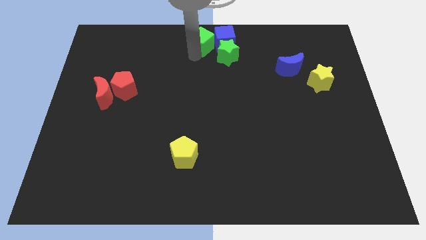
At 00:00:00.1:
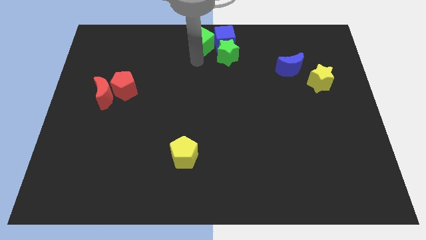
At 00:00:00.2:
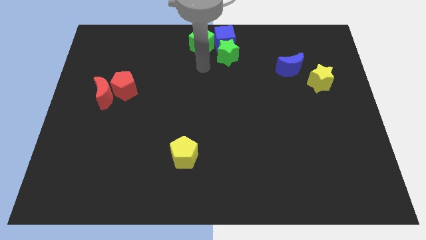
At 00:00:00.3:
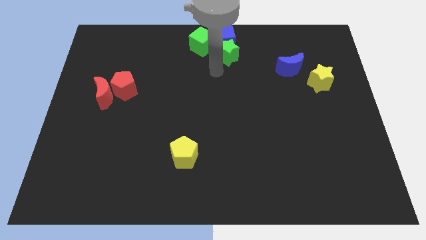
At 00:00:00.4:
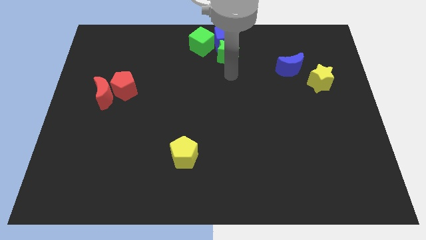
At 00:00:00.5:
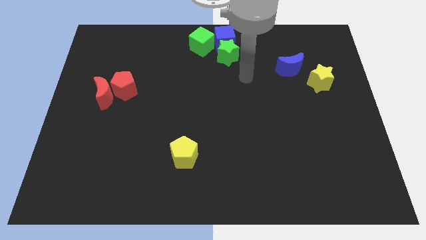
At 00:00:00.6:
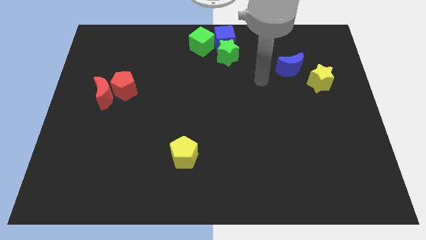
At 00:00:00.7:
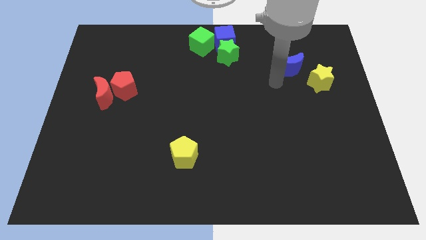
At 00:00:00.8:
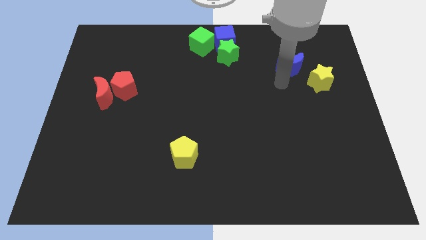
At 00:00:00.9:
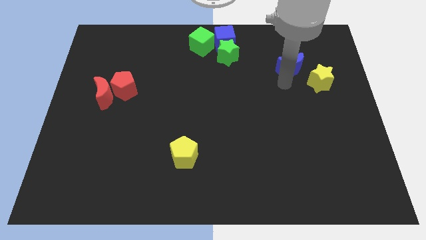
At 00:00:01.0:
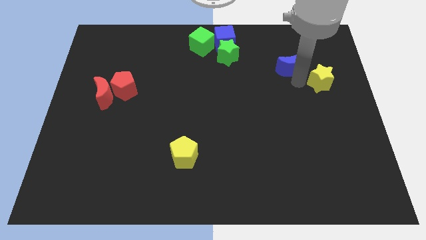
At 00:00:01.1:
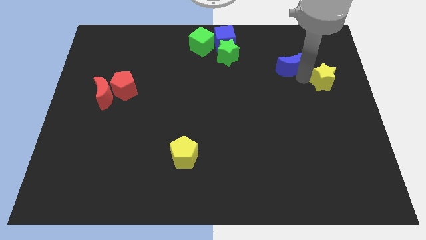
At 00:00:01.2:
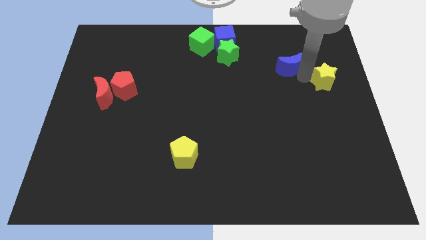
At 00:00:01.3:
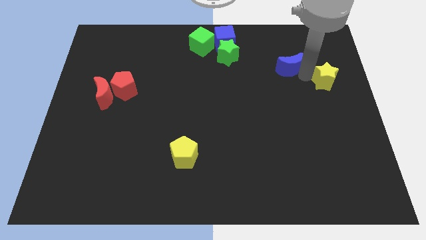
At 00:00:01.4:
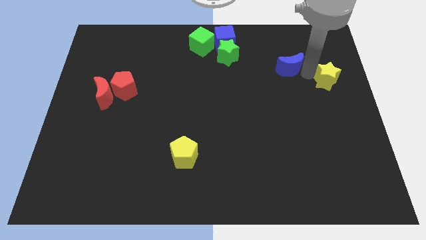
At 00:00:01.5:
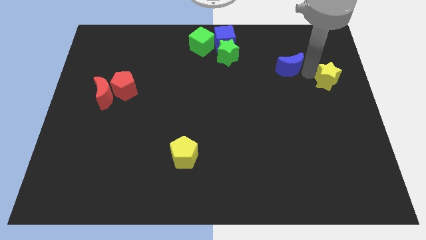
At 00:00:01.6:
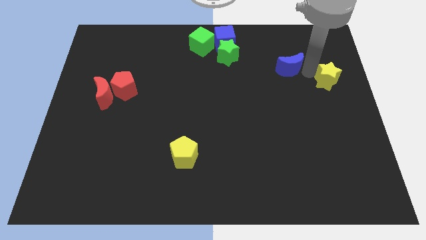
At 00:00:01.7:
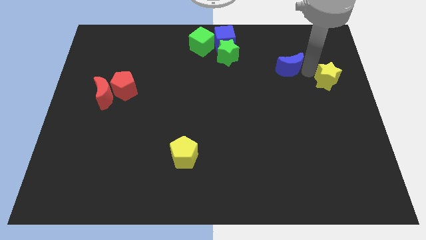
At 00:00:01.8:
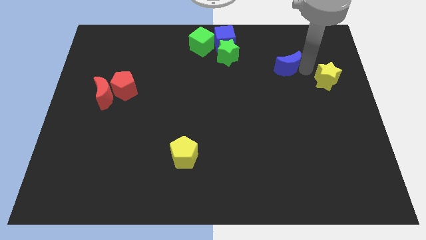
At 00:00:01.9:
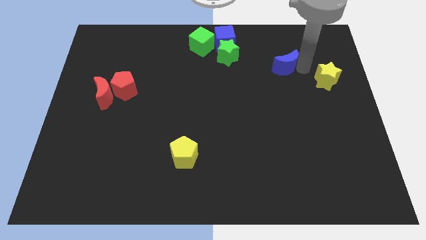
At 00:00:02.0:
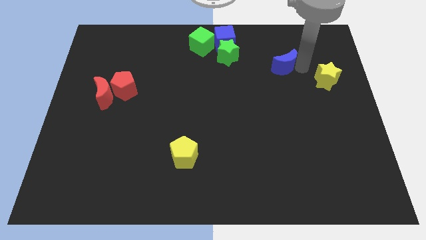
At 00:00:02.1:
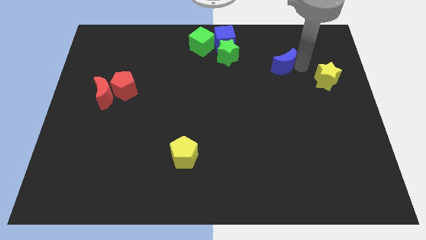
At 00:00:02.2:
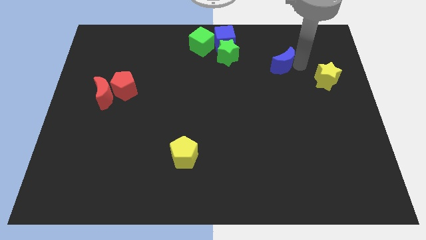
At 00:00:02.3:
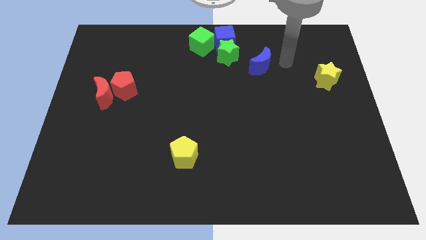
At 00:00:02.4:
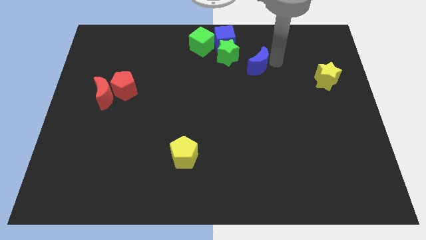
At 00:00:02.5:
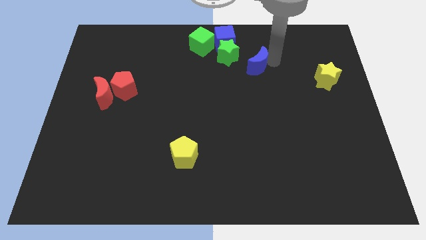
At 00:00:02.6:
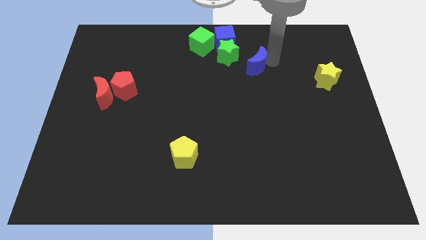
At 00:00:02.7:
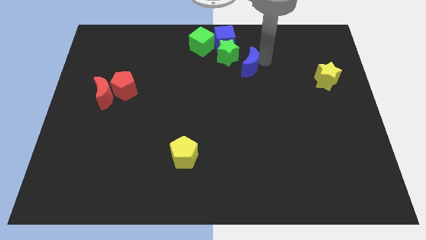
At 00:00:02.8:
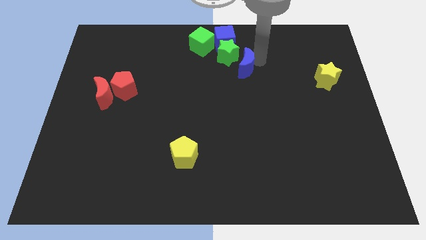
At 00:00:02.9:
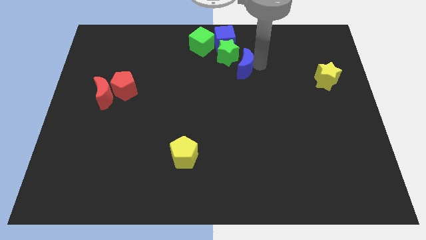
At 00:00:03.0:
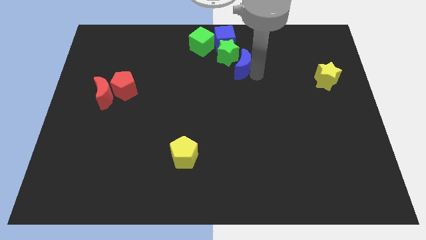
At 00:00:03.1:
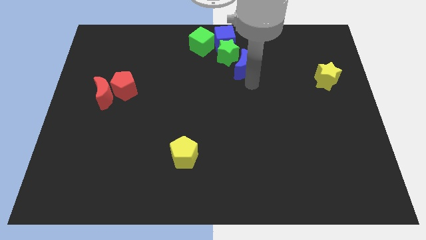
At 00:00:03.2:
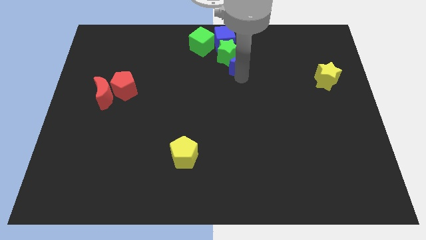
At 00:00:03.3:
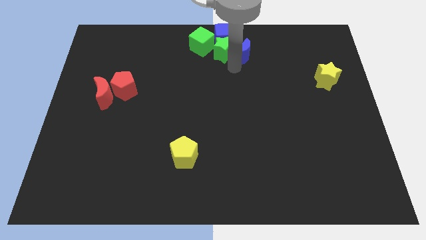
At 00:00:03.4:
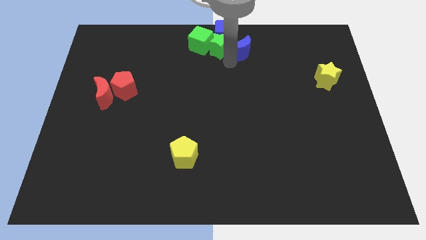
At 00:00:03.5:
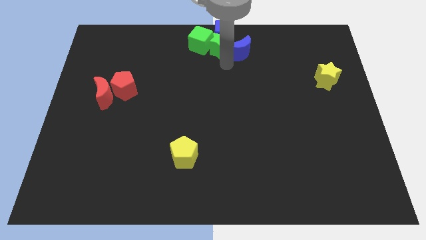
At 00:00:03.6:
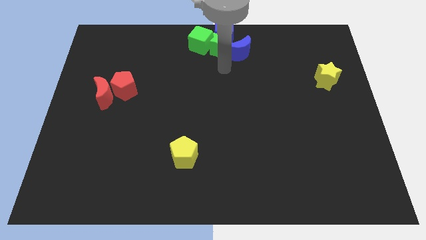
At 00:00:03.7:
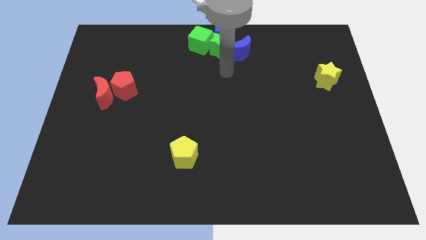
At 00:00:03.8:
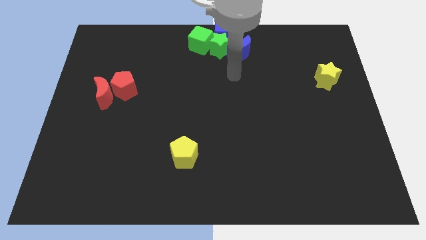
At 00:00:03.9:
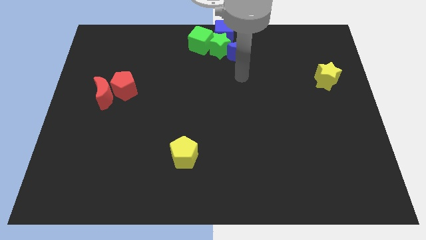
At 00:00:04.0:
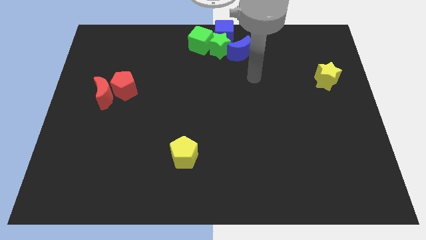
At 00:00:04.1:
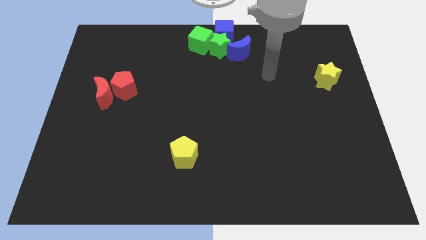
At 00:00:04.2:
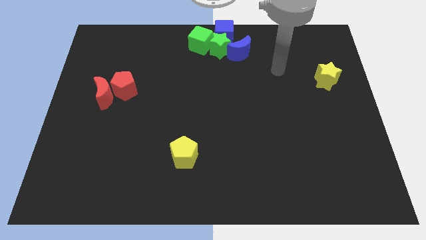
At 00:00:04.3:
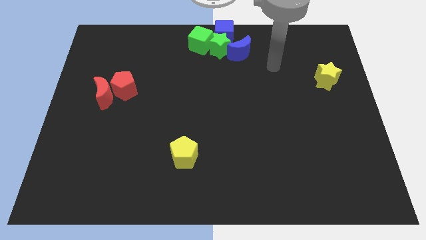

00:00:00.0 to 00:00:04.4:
push the blue moon close to the blocks

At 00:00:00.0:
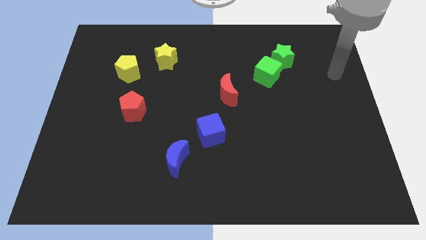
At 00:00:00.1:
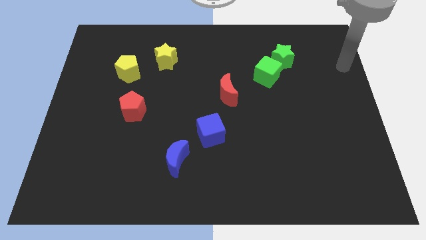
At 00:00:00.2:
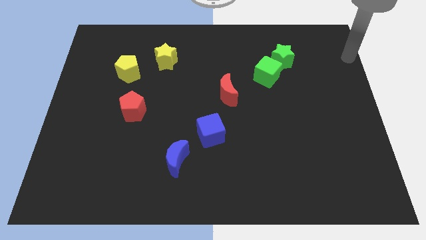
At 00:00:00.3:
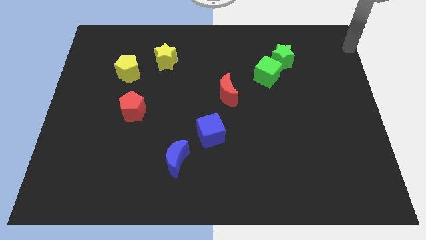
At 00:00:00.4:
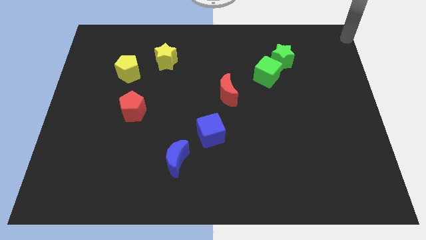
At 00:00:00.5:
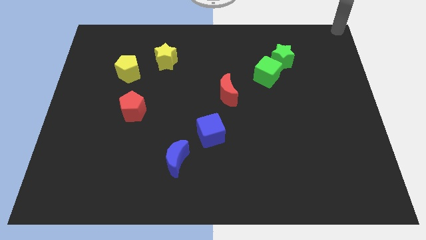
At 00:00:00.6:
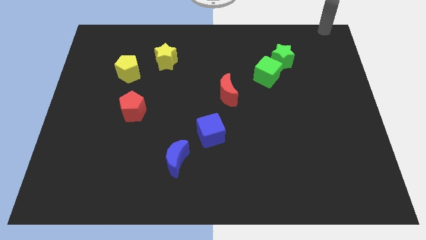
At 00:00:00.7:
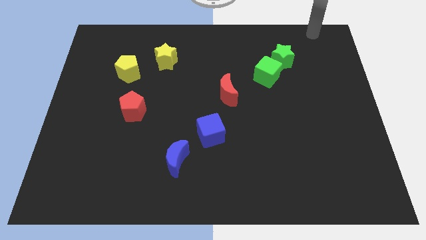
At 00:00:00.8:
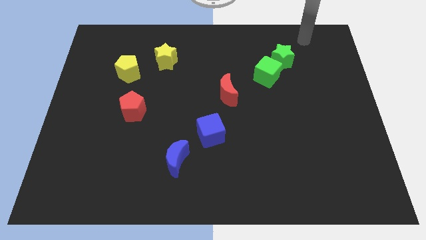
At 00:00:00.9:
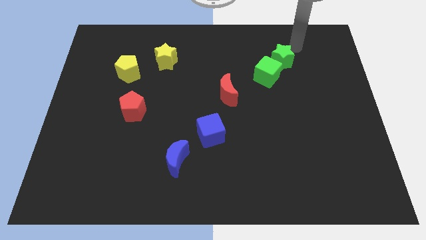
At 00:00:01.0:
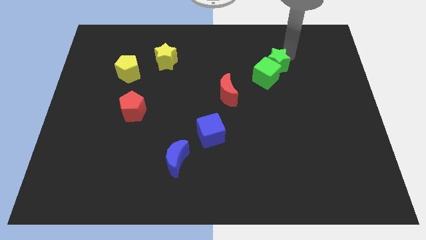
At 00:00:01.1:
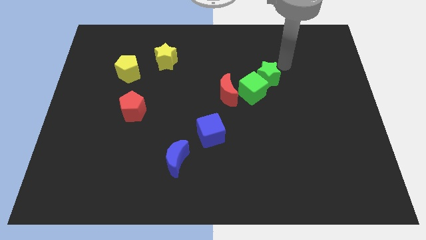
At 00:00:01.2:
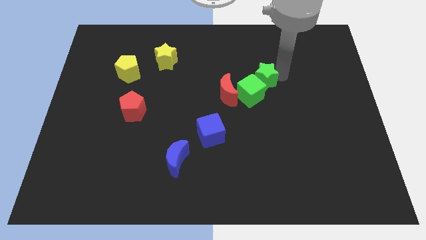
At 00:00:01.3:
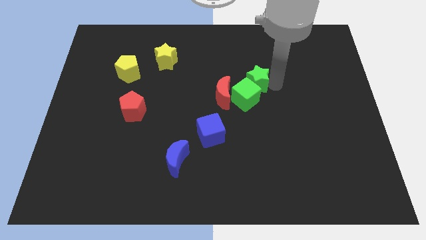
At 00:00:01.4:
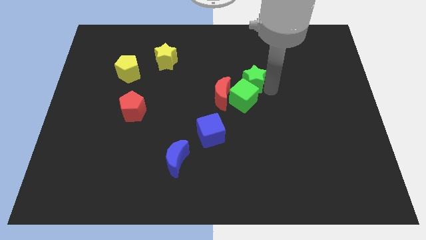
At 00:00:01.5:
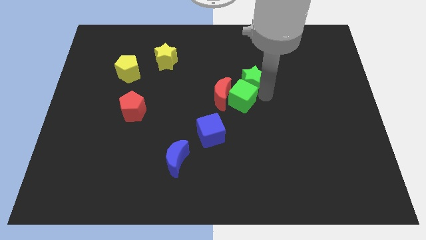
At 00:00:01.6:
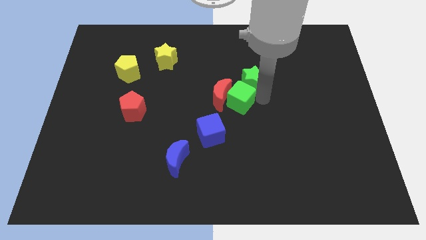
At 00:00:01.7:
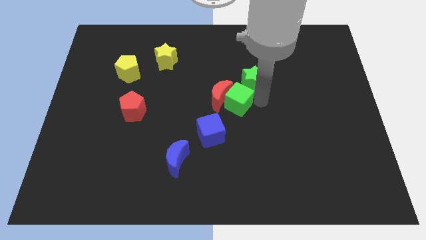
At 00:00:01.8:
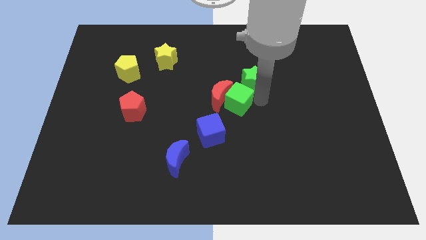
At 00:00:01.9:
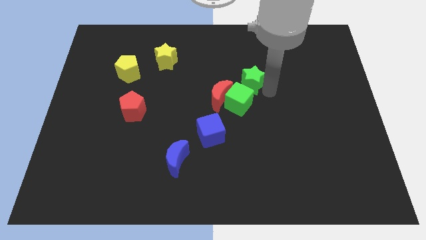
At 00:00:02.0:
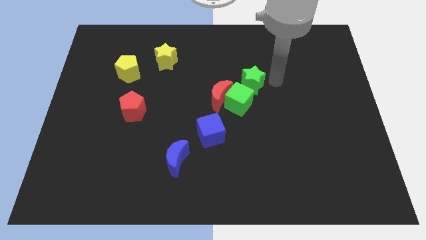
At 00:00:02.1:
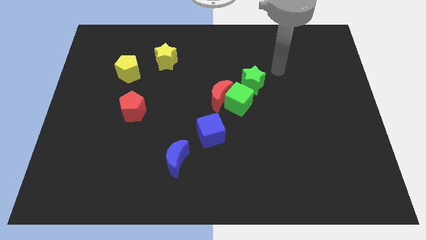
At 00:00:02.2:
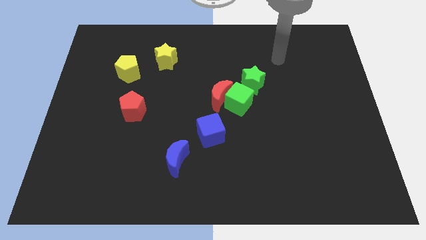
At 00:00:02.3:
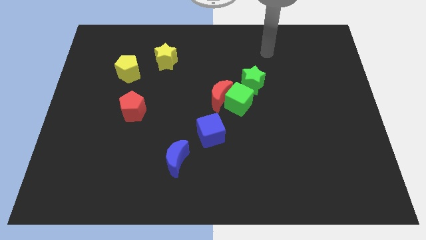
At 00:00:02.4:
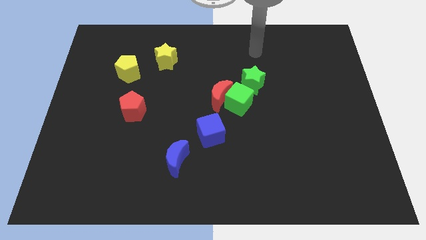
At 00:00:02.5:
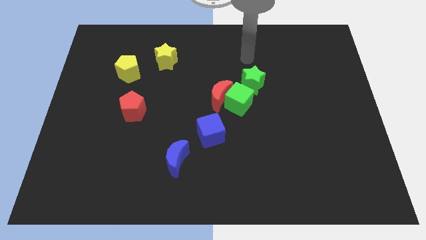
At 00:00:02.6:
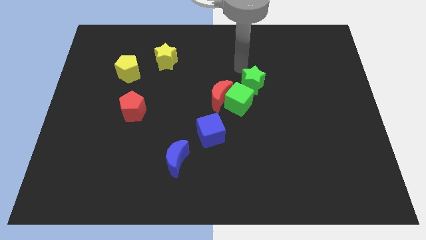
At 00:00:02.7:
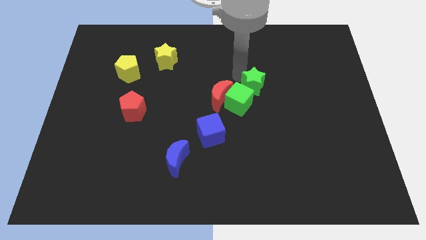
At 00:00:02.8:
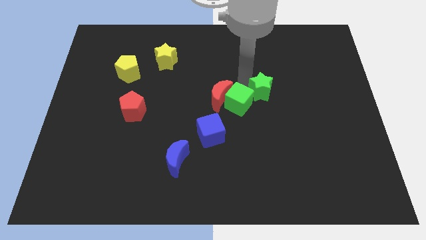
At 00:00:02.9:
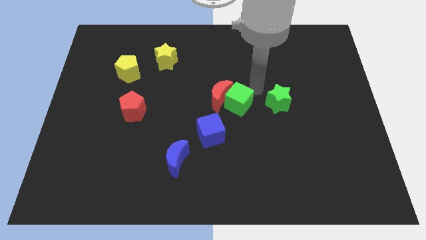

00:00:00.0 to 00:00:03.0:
push the green cube with the green star

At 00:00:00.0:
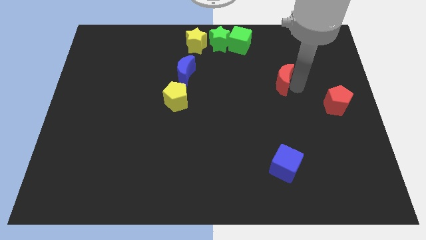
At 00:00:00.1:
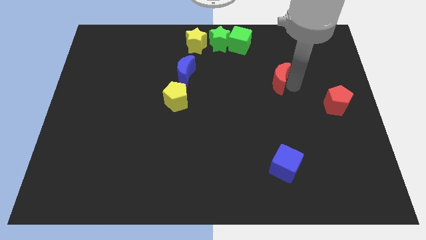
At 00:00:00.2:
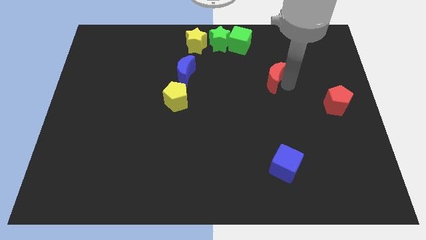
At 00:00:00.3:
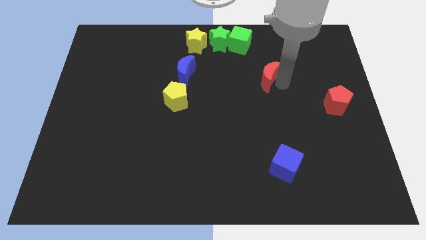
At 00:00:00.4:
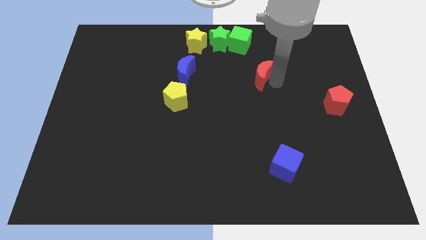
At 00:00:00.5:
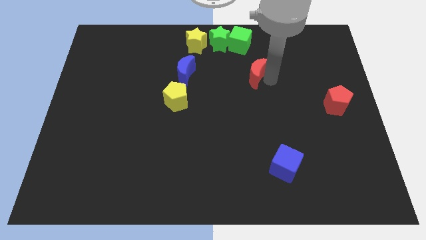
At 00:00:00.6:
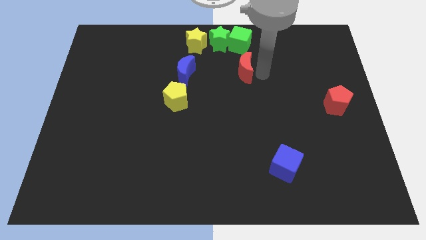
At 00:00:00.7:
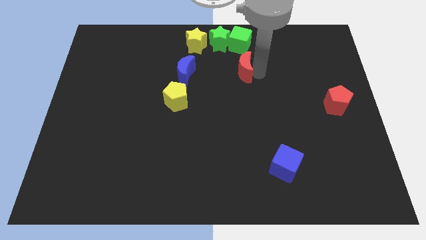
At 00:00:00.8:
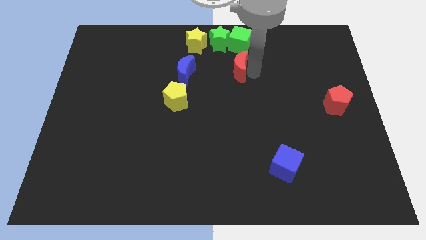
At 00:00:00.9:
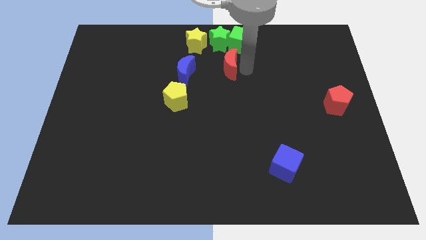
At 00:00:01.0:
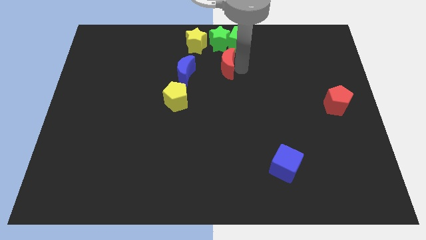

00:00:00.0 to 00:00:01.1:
place red moon below green cube

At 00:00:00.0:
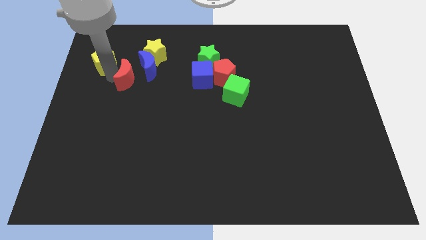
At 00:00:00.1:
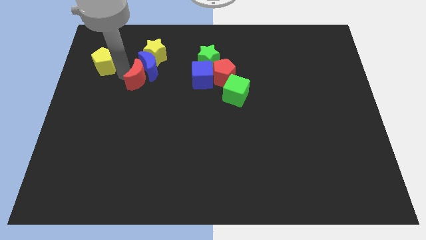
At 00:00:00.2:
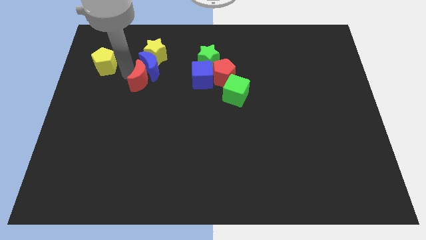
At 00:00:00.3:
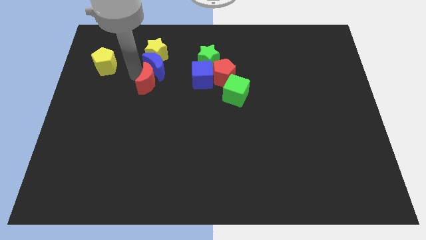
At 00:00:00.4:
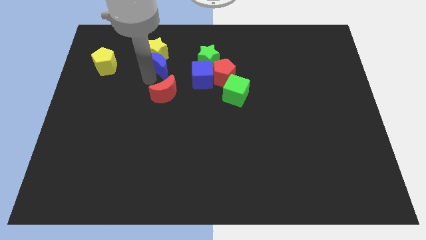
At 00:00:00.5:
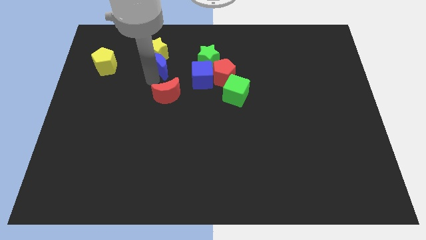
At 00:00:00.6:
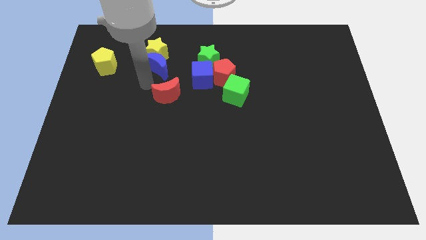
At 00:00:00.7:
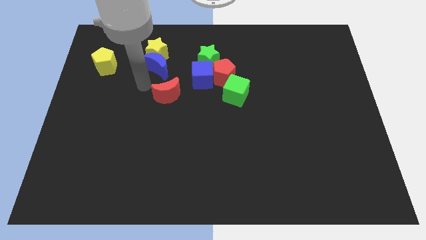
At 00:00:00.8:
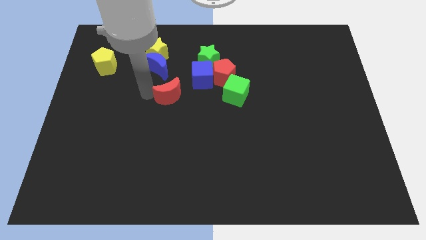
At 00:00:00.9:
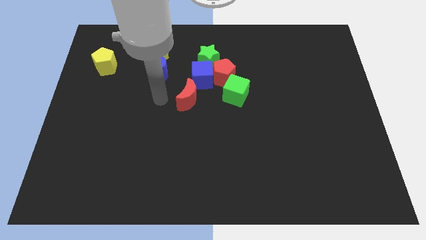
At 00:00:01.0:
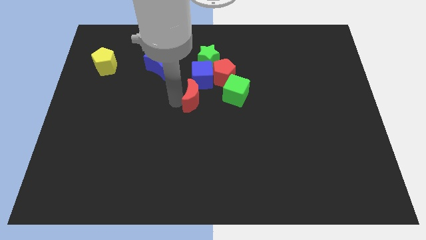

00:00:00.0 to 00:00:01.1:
push the red moon below blue cube
